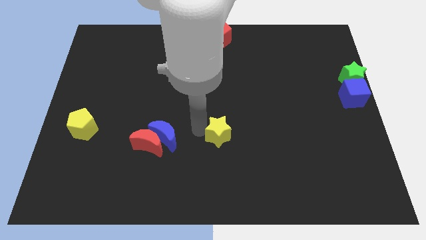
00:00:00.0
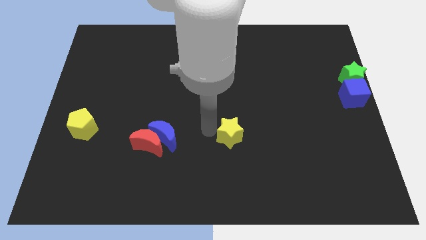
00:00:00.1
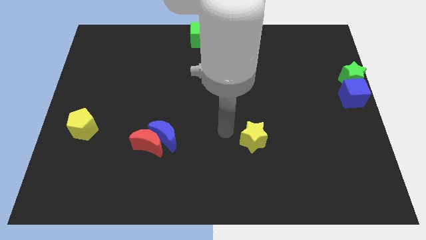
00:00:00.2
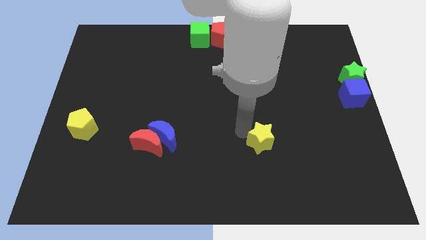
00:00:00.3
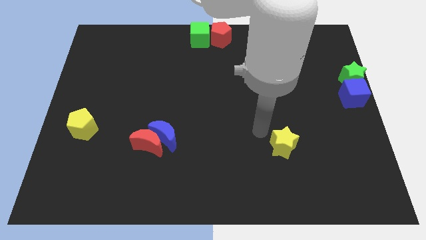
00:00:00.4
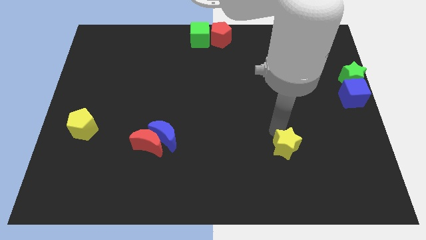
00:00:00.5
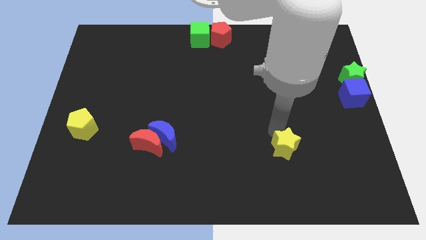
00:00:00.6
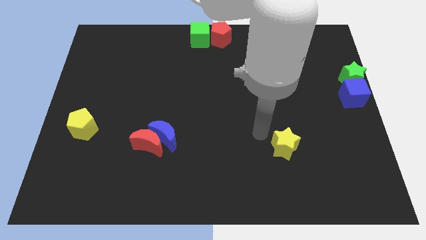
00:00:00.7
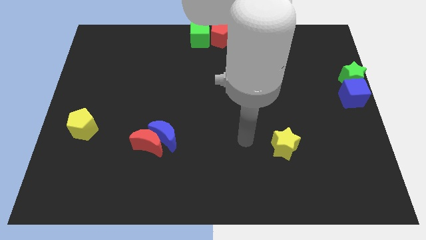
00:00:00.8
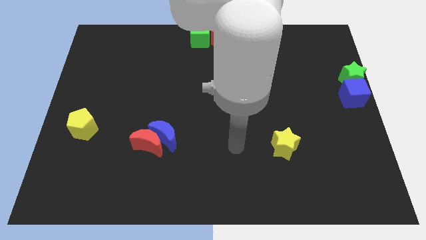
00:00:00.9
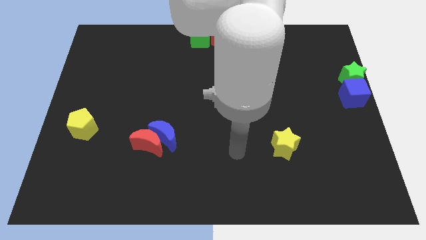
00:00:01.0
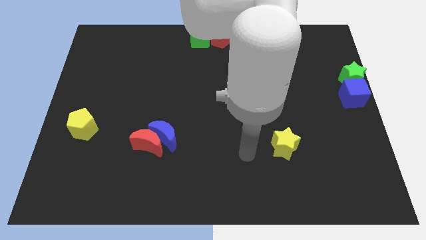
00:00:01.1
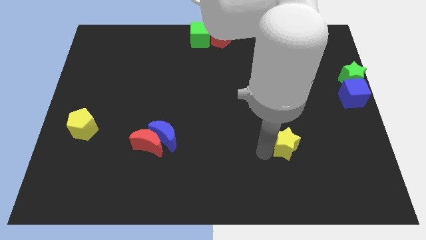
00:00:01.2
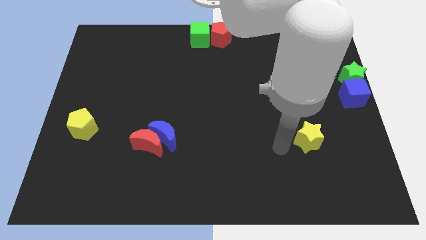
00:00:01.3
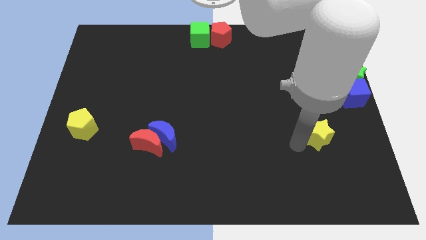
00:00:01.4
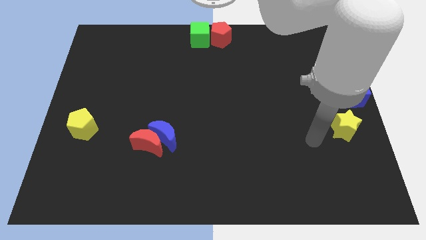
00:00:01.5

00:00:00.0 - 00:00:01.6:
push the yellow star to the right side of the board

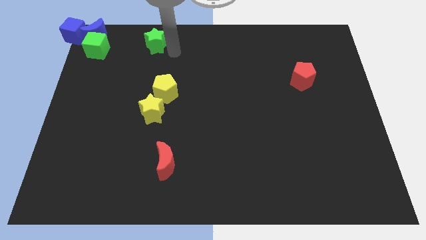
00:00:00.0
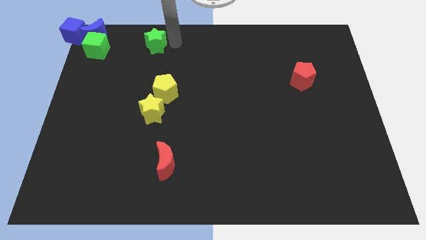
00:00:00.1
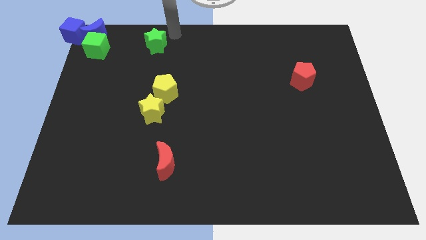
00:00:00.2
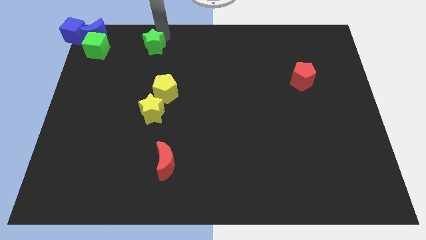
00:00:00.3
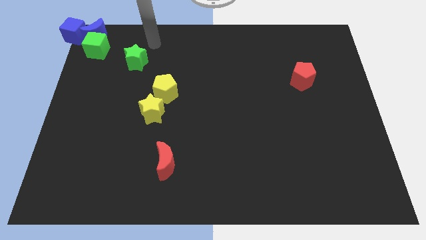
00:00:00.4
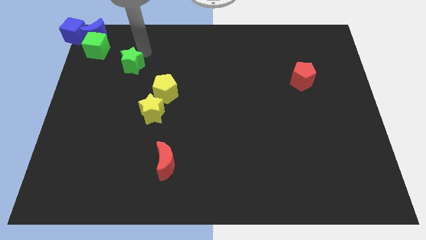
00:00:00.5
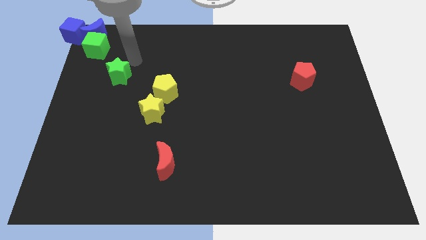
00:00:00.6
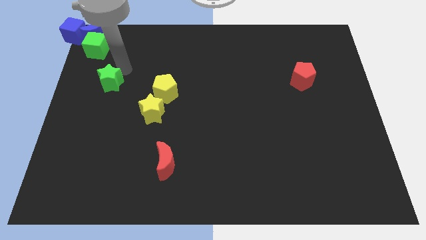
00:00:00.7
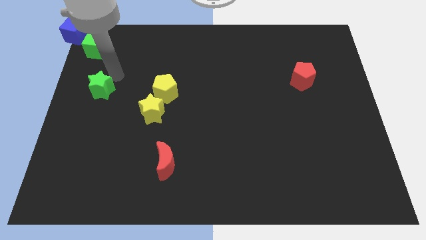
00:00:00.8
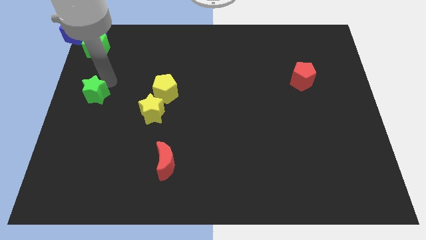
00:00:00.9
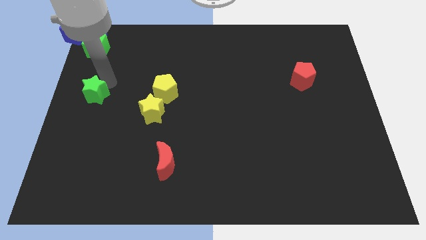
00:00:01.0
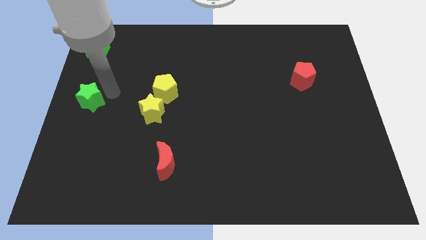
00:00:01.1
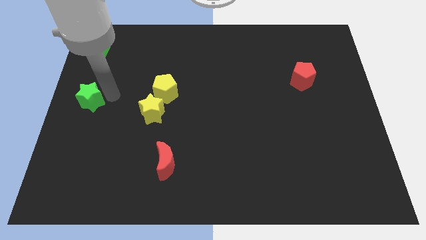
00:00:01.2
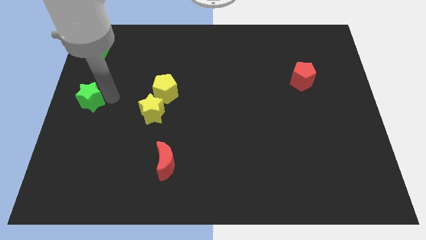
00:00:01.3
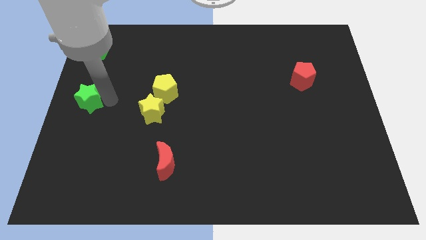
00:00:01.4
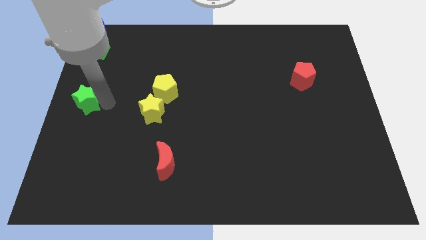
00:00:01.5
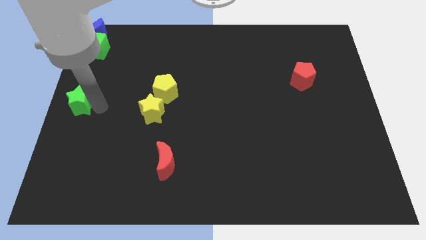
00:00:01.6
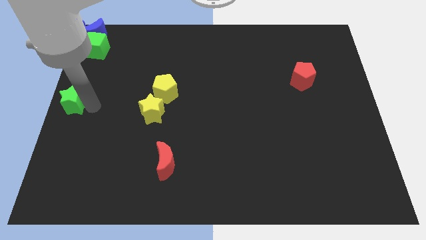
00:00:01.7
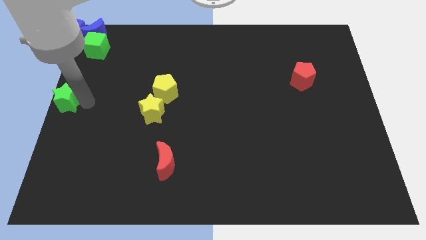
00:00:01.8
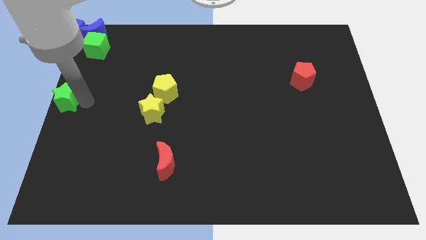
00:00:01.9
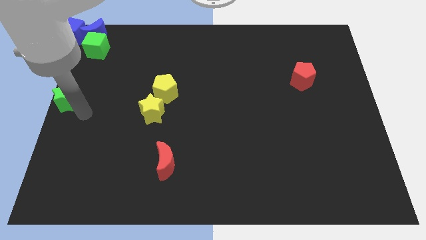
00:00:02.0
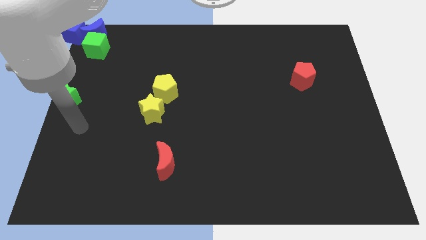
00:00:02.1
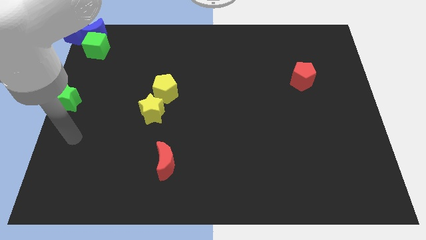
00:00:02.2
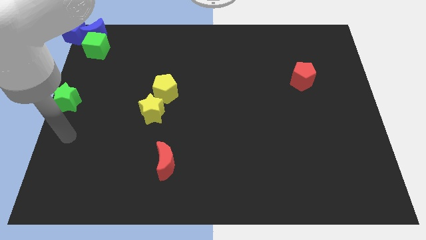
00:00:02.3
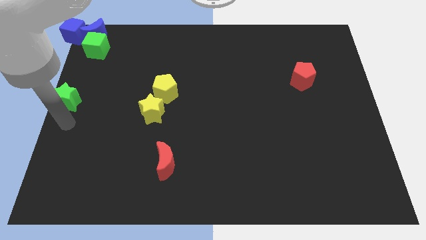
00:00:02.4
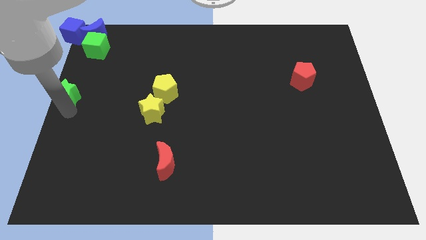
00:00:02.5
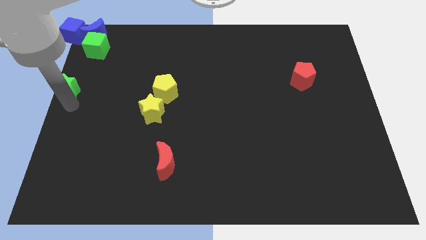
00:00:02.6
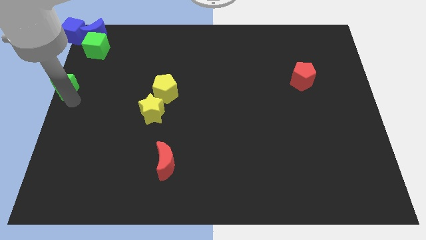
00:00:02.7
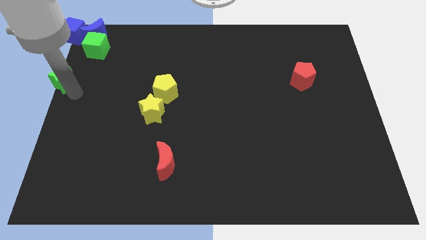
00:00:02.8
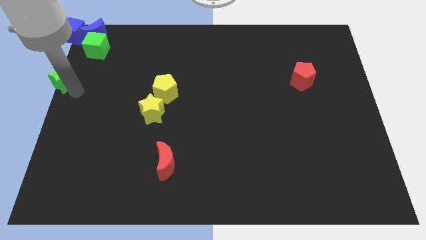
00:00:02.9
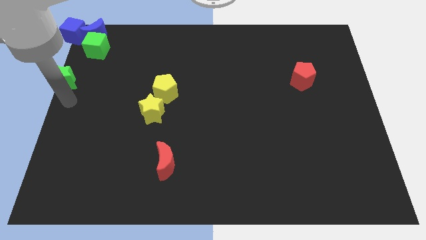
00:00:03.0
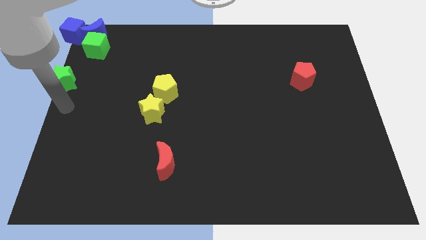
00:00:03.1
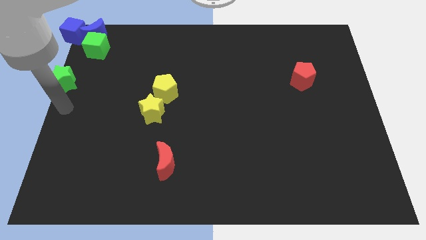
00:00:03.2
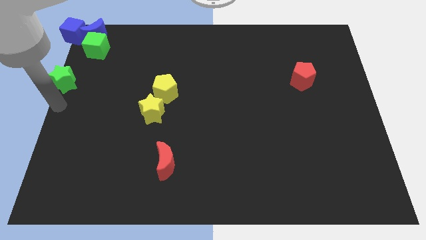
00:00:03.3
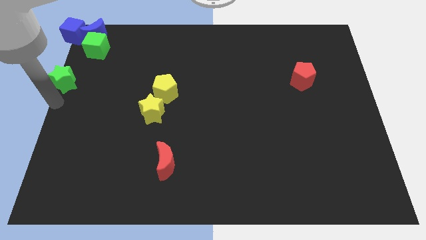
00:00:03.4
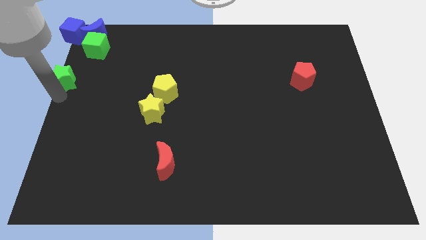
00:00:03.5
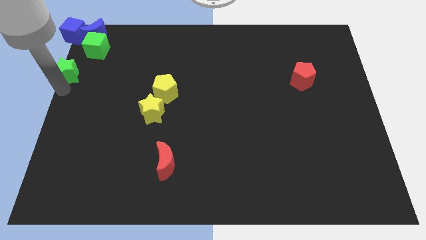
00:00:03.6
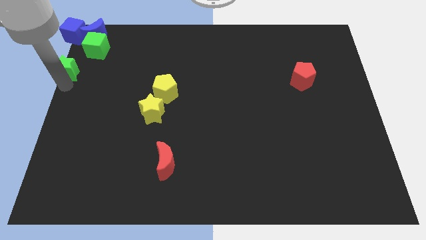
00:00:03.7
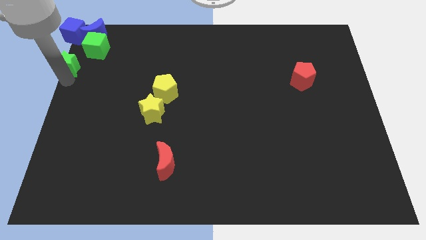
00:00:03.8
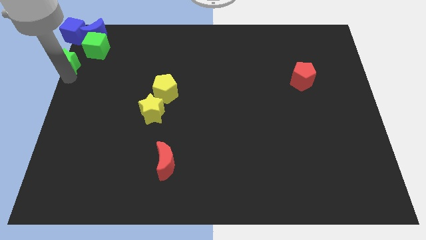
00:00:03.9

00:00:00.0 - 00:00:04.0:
push the green star towards the top left corner of the board

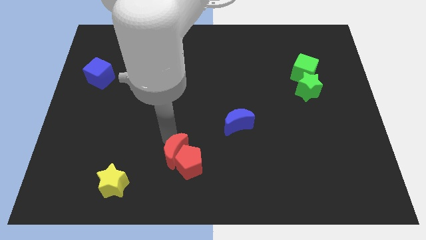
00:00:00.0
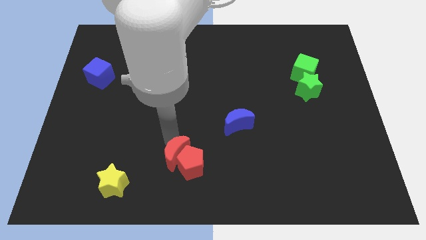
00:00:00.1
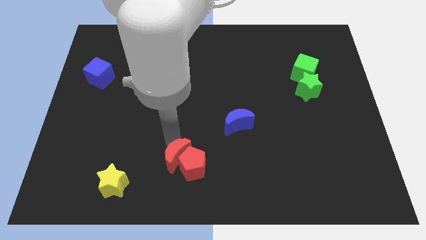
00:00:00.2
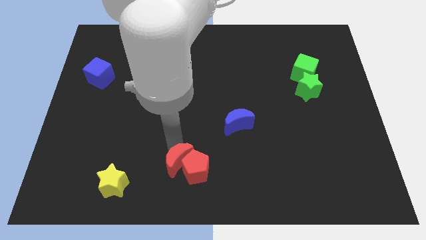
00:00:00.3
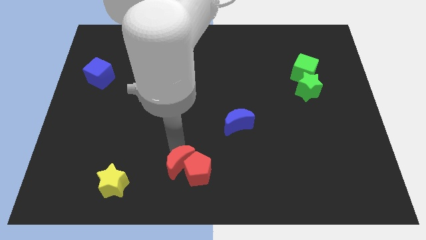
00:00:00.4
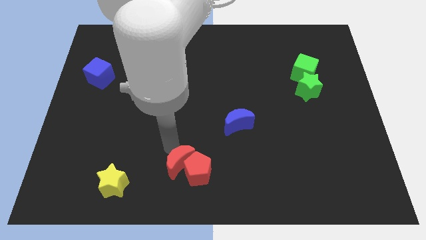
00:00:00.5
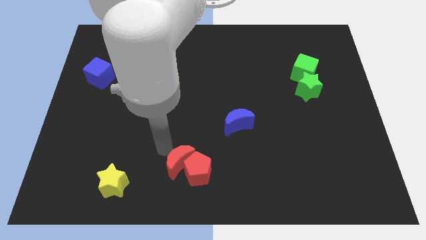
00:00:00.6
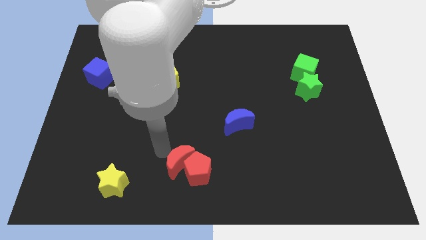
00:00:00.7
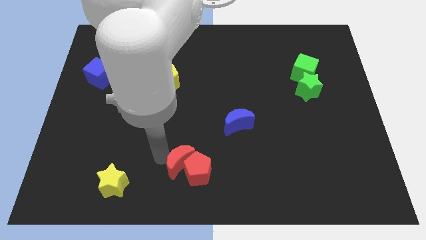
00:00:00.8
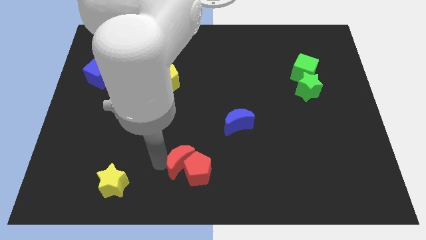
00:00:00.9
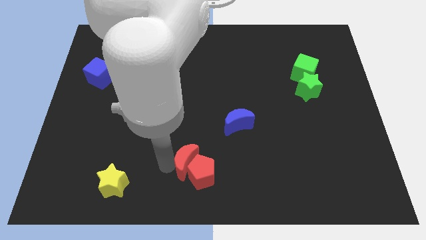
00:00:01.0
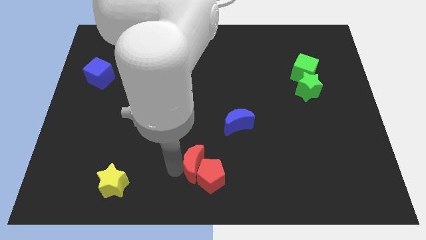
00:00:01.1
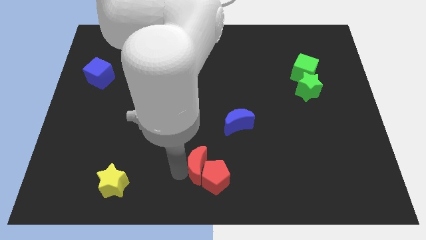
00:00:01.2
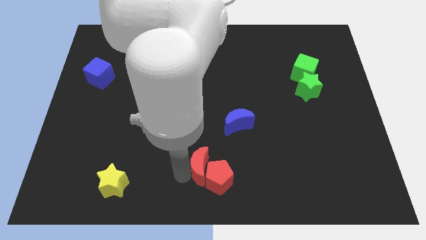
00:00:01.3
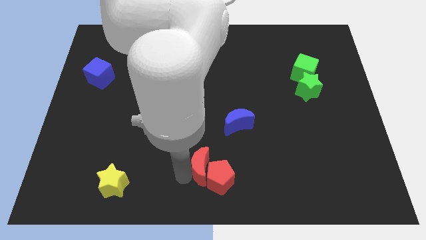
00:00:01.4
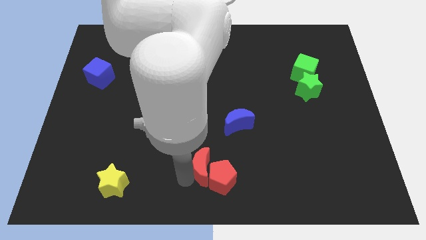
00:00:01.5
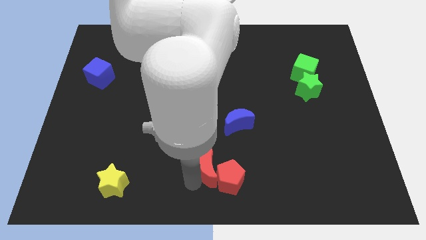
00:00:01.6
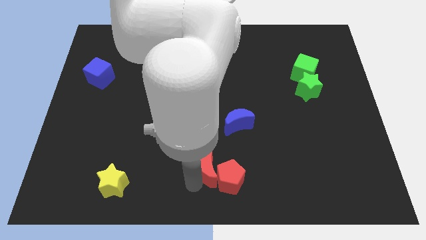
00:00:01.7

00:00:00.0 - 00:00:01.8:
push red crescent and pentagon slightly down

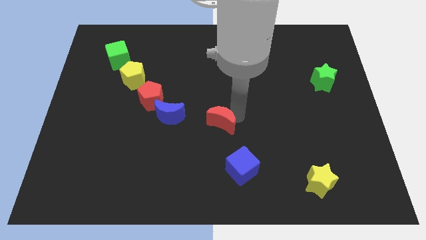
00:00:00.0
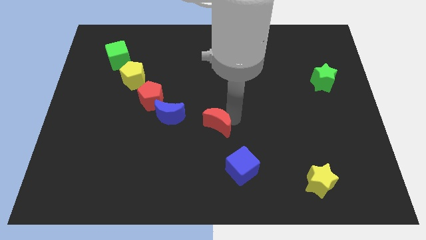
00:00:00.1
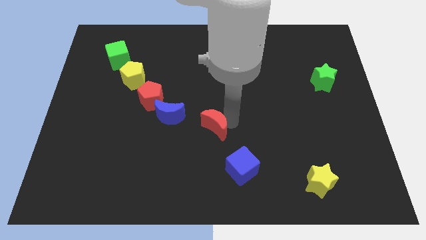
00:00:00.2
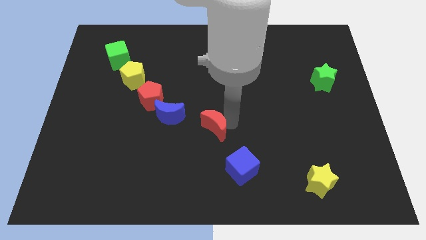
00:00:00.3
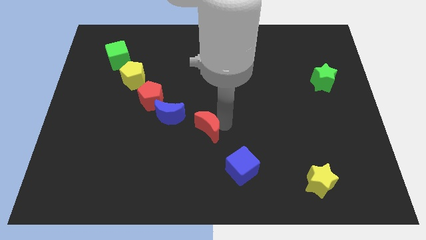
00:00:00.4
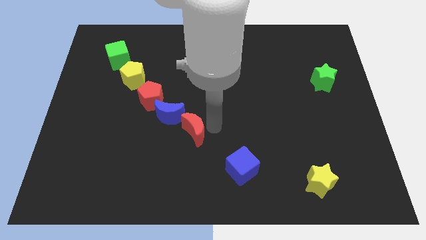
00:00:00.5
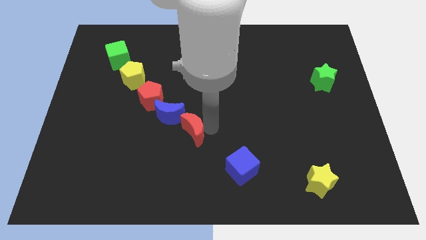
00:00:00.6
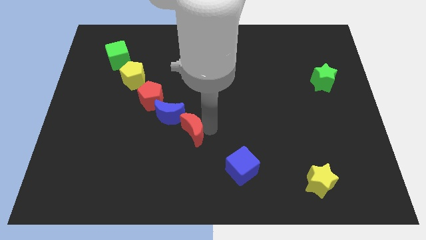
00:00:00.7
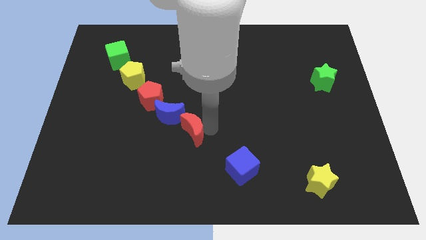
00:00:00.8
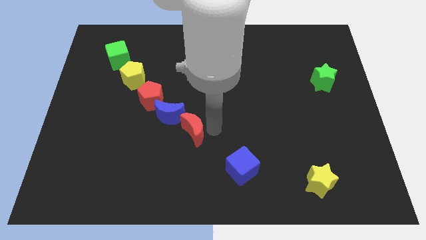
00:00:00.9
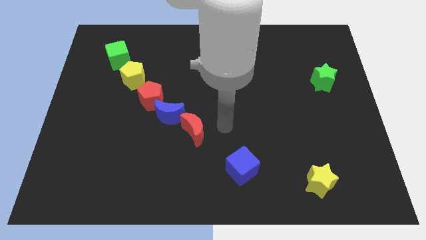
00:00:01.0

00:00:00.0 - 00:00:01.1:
place red moon below blue moon

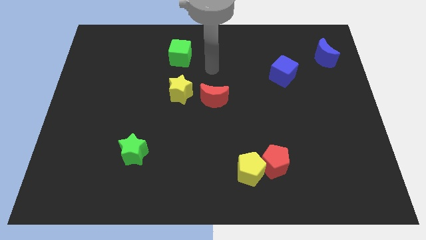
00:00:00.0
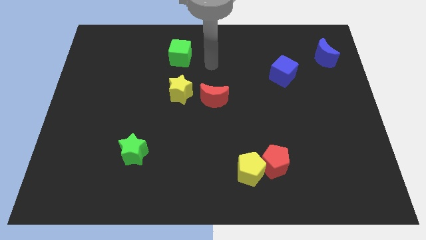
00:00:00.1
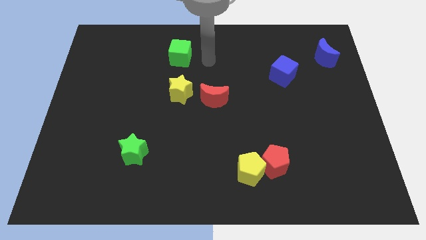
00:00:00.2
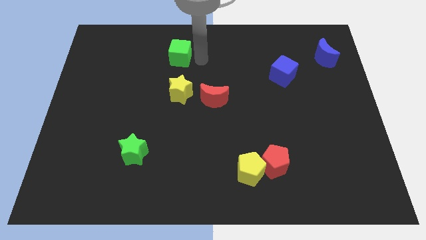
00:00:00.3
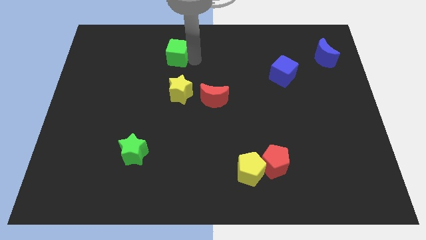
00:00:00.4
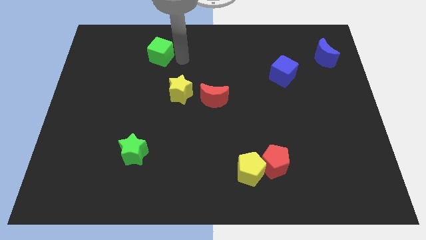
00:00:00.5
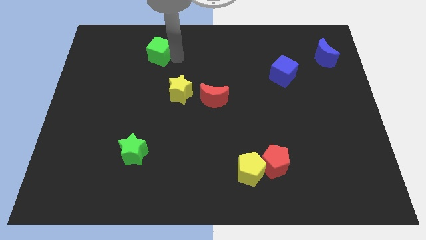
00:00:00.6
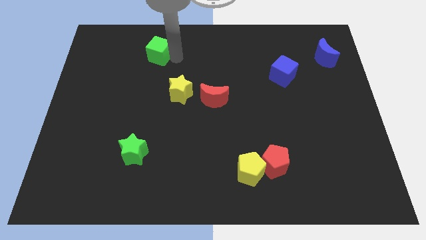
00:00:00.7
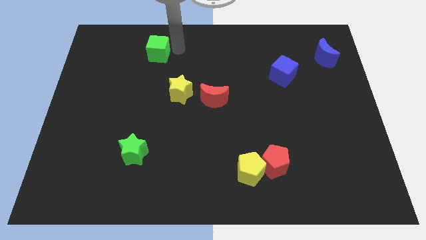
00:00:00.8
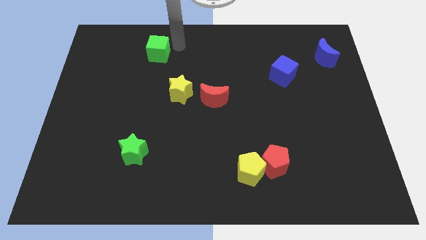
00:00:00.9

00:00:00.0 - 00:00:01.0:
point your arm right to green cube
